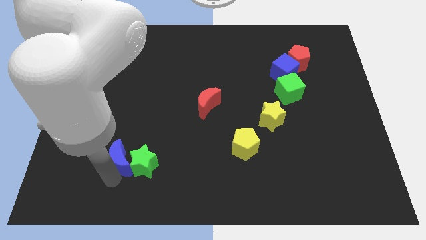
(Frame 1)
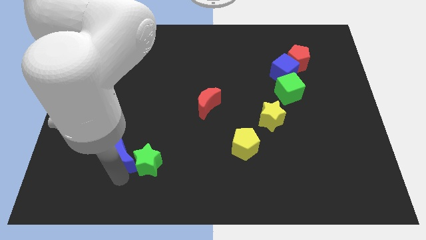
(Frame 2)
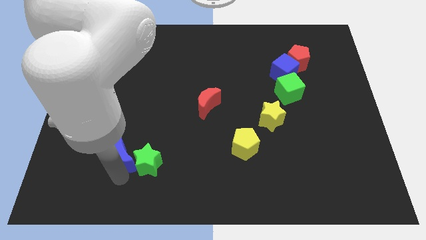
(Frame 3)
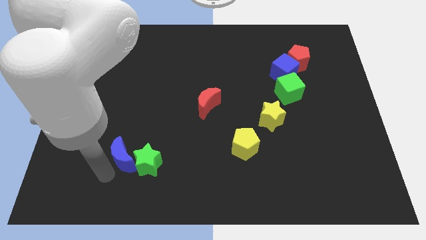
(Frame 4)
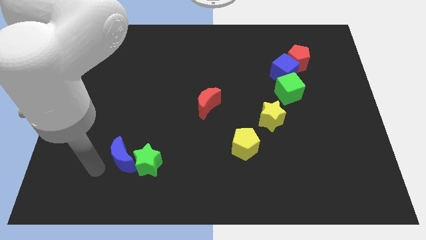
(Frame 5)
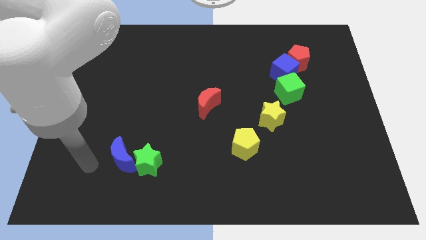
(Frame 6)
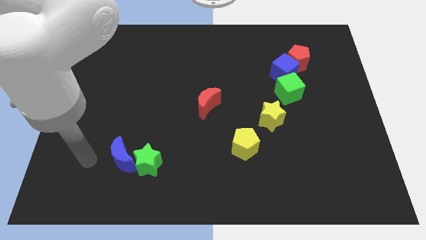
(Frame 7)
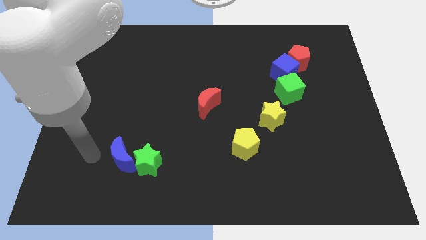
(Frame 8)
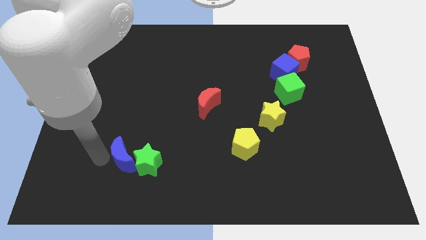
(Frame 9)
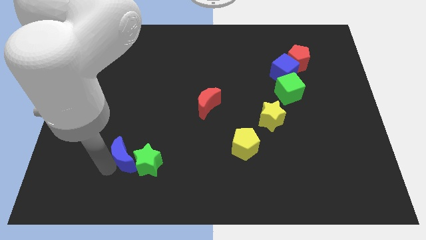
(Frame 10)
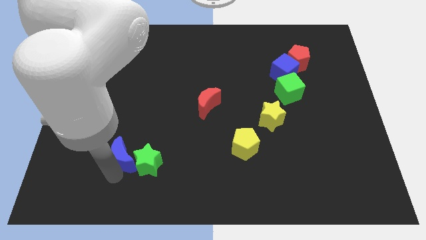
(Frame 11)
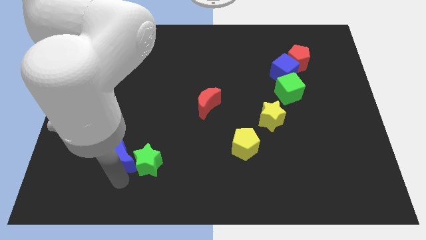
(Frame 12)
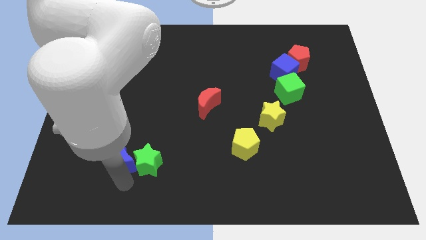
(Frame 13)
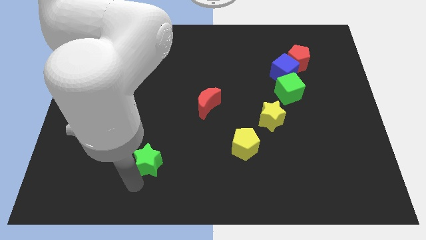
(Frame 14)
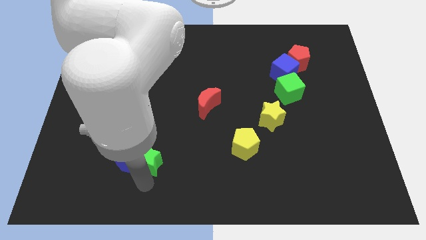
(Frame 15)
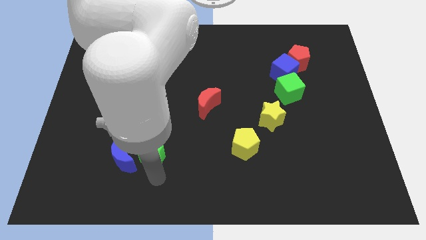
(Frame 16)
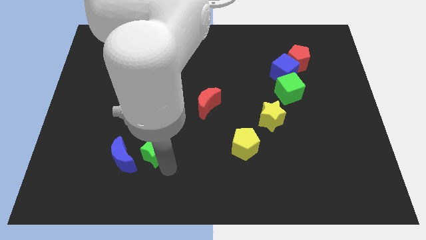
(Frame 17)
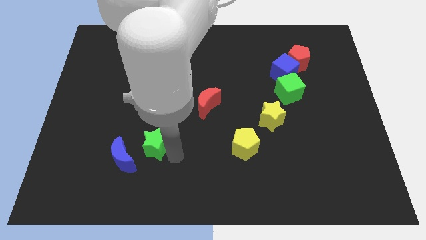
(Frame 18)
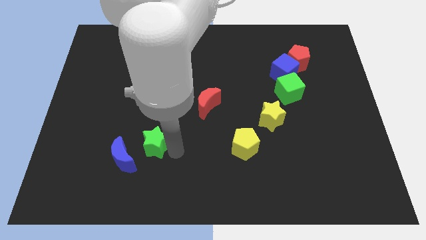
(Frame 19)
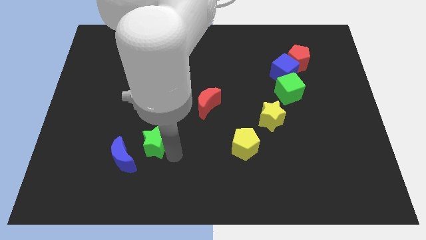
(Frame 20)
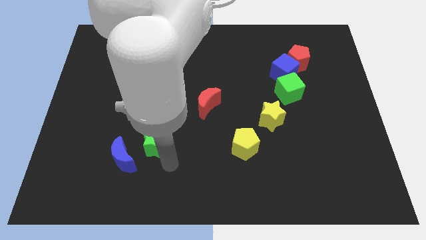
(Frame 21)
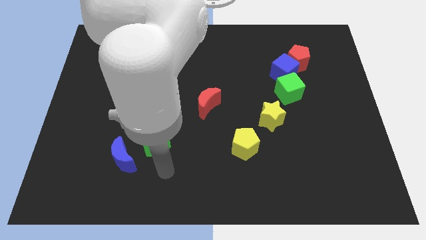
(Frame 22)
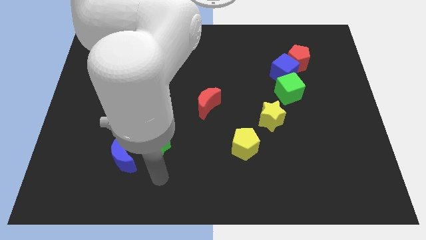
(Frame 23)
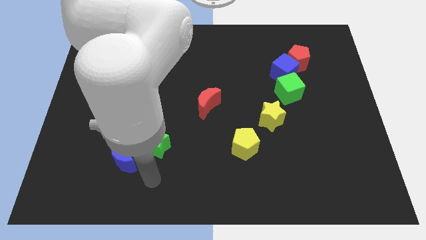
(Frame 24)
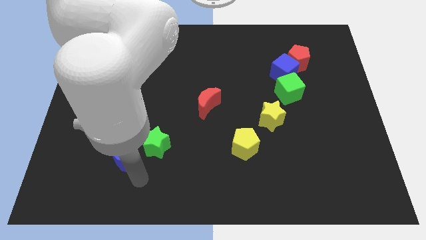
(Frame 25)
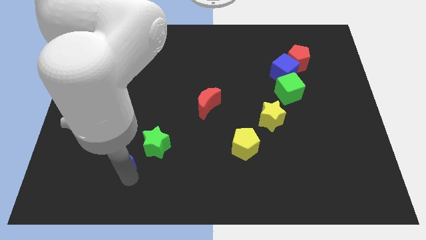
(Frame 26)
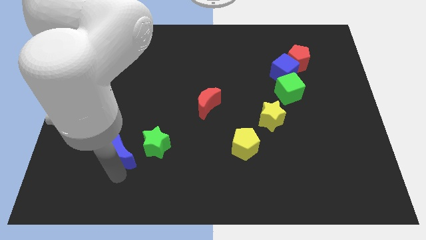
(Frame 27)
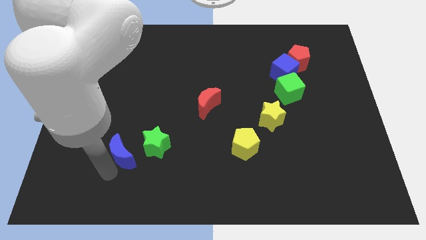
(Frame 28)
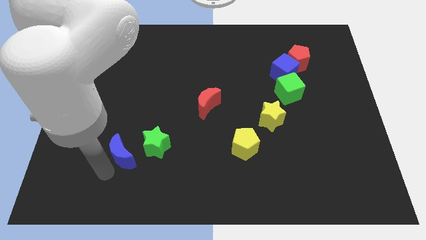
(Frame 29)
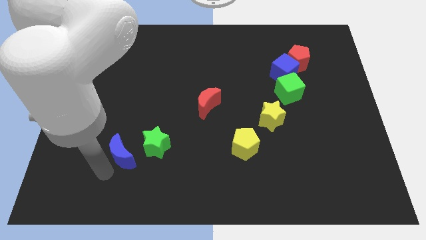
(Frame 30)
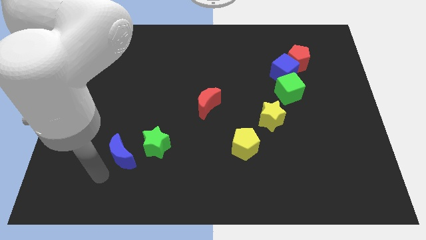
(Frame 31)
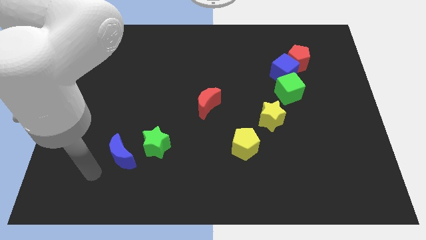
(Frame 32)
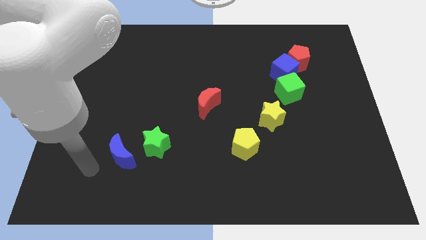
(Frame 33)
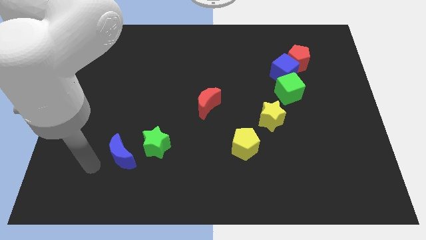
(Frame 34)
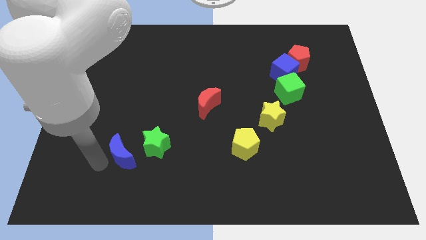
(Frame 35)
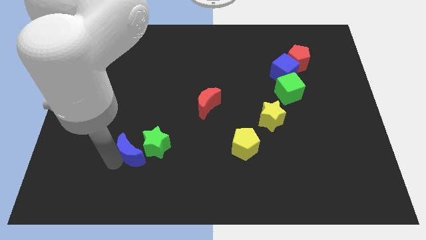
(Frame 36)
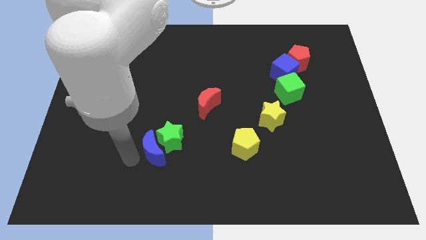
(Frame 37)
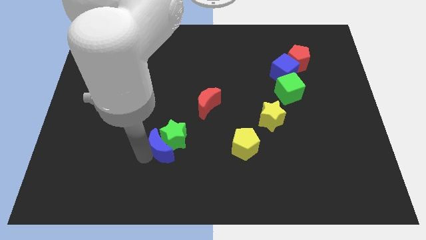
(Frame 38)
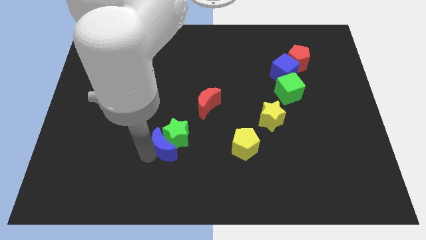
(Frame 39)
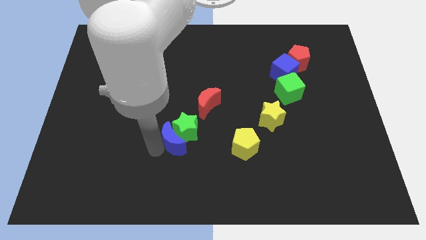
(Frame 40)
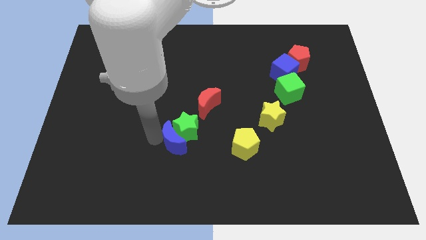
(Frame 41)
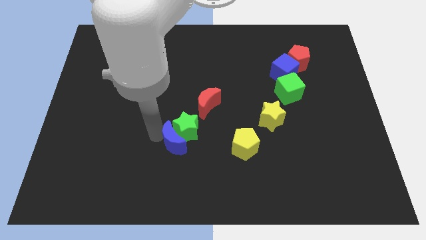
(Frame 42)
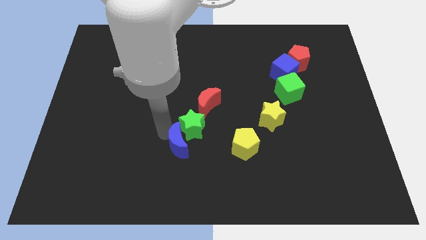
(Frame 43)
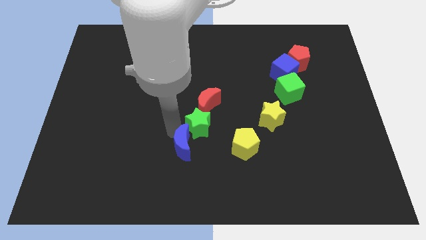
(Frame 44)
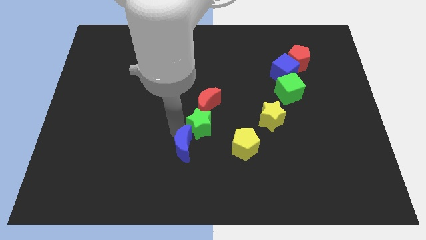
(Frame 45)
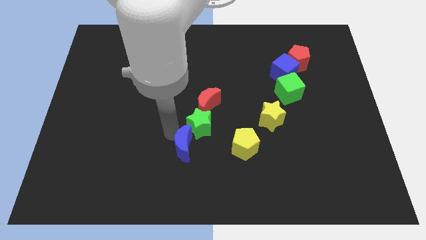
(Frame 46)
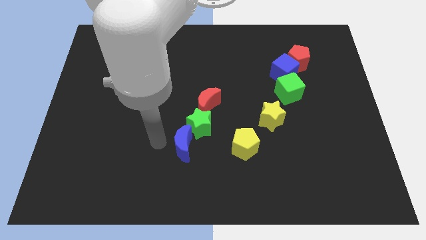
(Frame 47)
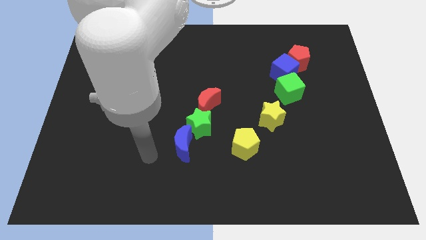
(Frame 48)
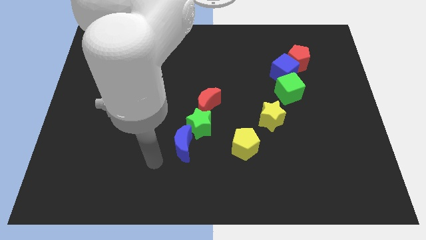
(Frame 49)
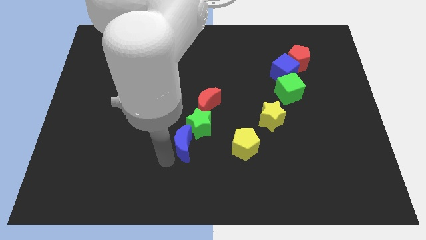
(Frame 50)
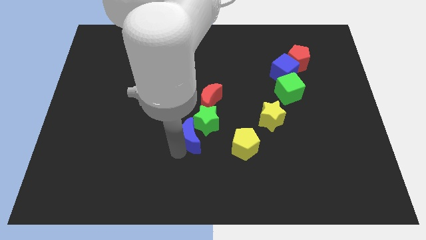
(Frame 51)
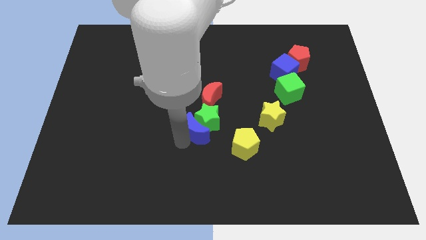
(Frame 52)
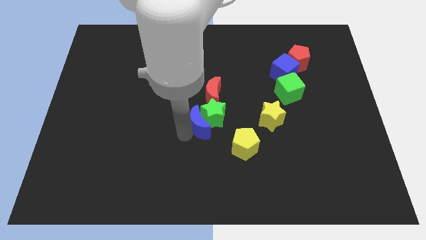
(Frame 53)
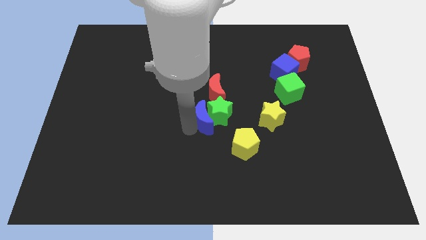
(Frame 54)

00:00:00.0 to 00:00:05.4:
push the blue moon and green star to the center

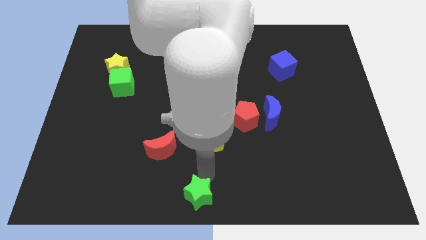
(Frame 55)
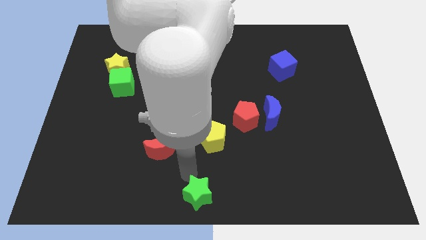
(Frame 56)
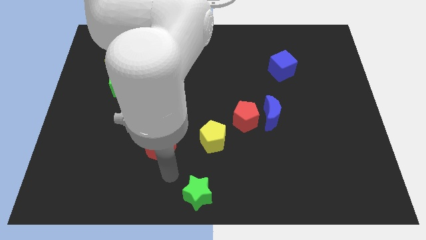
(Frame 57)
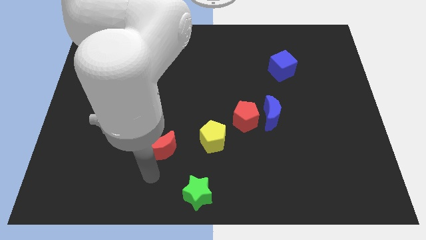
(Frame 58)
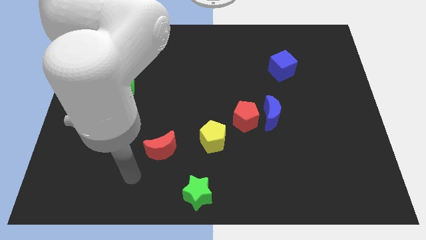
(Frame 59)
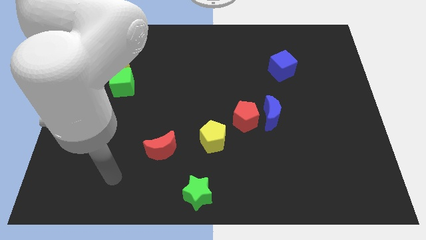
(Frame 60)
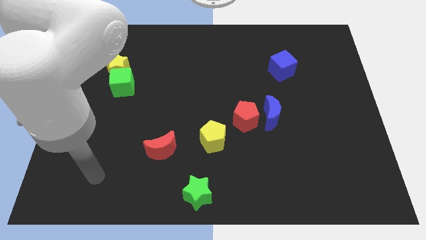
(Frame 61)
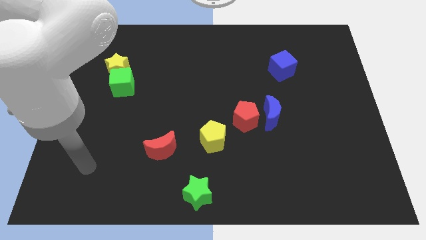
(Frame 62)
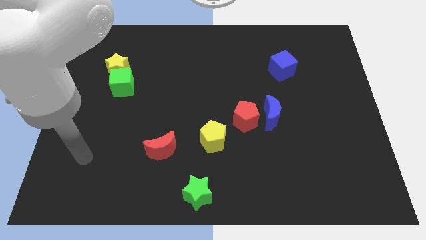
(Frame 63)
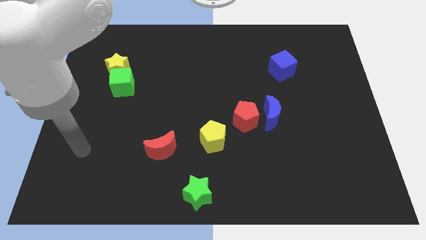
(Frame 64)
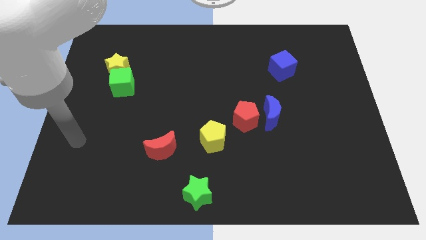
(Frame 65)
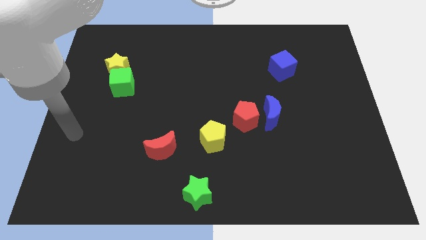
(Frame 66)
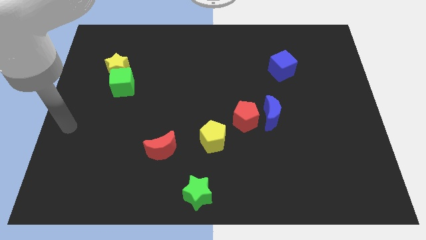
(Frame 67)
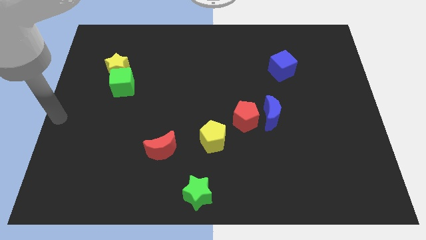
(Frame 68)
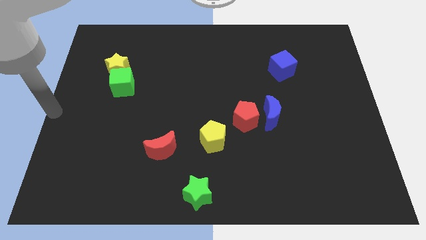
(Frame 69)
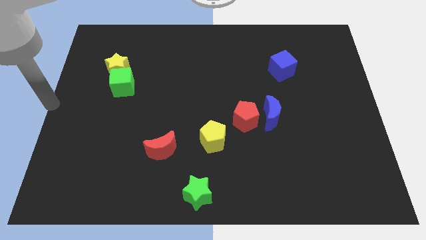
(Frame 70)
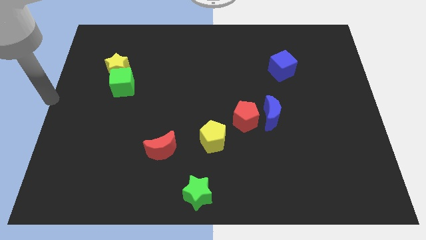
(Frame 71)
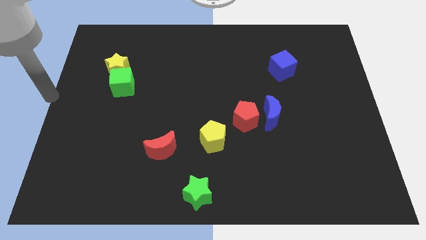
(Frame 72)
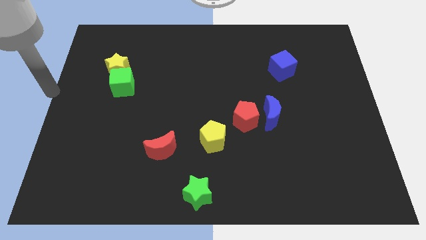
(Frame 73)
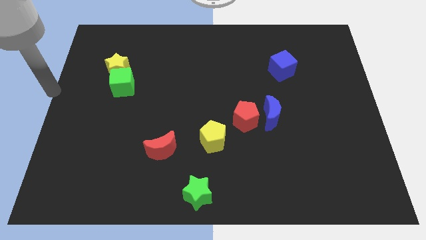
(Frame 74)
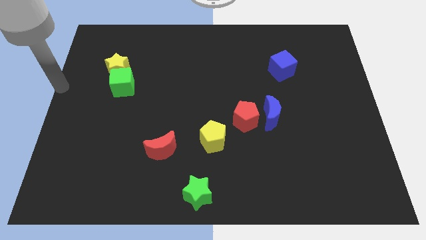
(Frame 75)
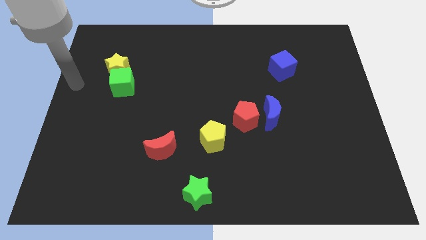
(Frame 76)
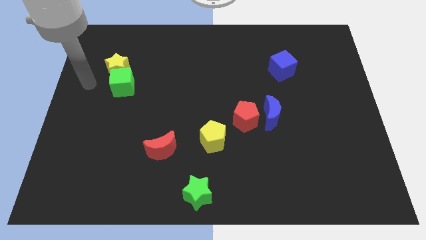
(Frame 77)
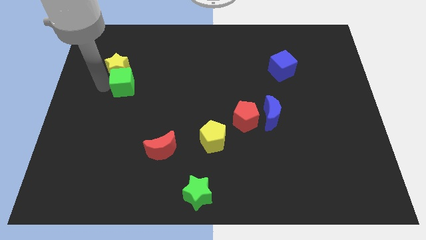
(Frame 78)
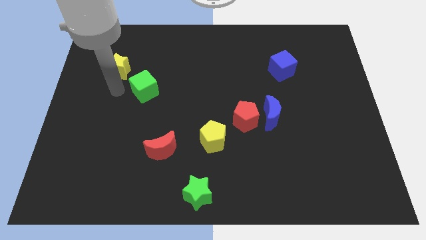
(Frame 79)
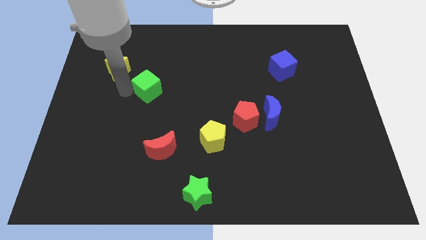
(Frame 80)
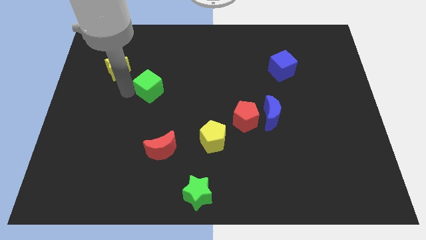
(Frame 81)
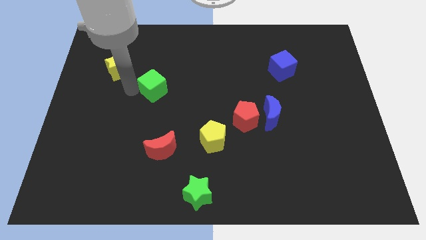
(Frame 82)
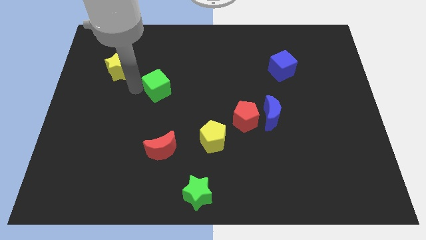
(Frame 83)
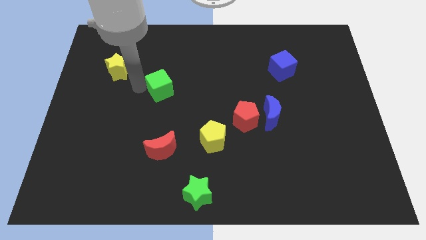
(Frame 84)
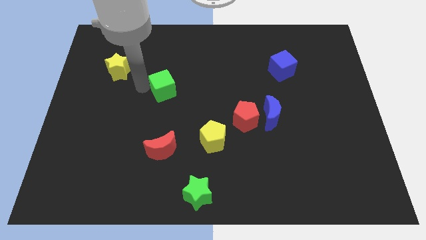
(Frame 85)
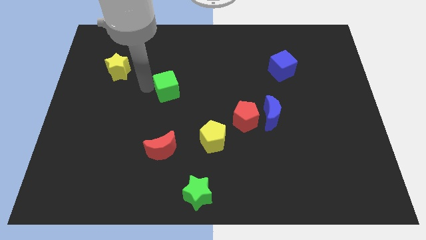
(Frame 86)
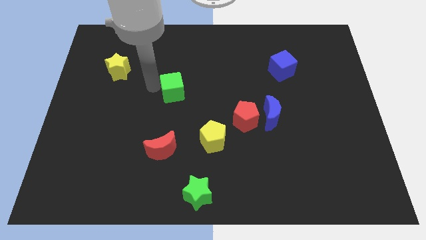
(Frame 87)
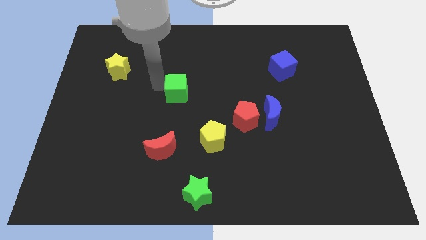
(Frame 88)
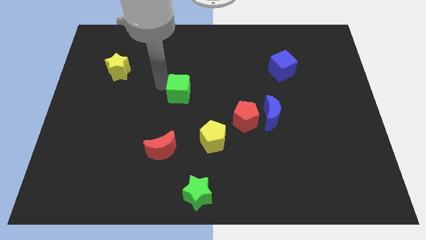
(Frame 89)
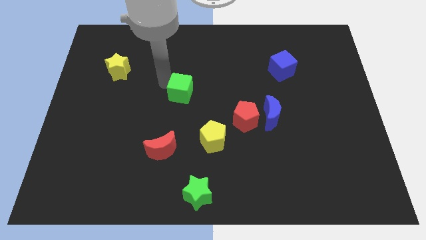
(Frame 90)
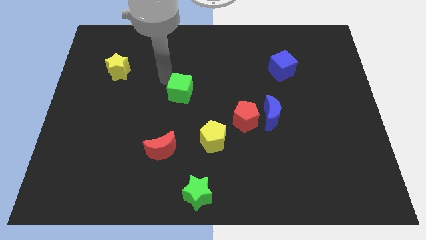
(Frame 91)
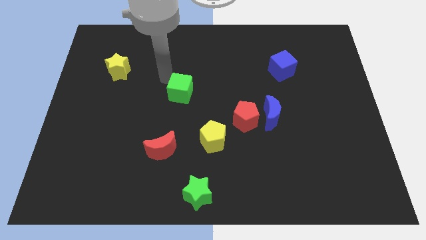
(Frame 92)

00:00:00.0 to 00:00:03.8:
separate the green cube from the yellow star
